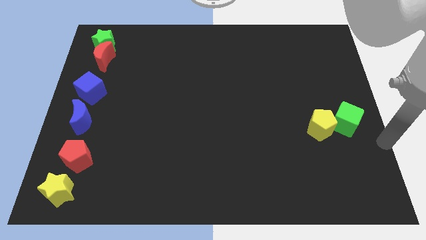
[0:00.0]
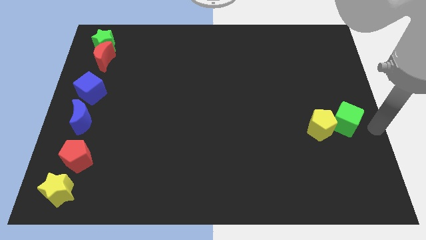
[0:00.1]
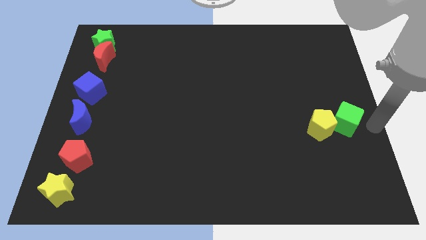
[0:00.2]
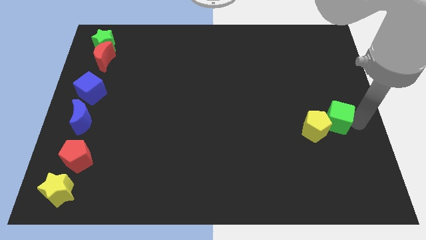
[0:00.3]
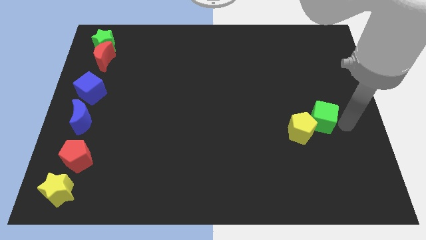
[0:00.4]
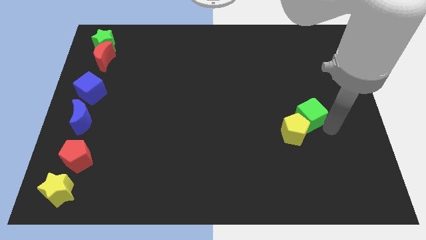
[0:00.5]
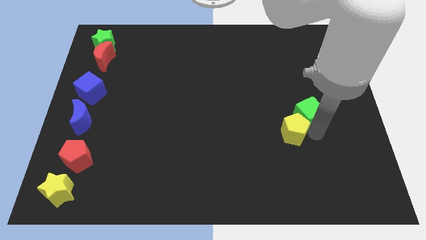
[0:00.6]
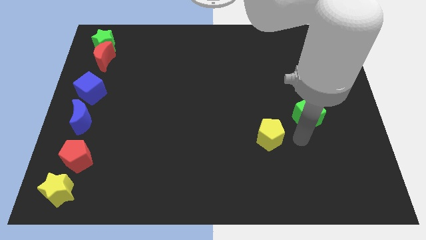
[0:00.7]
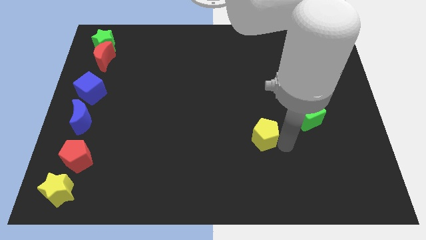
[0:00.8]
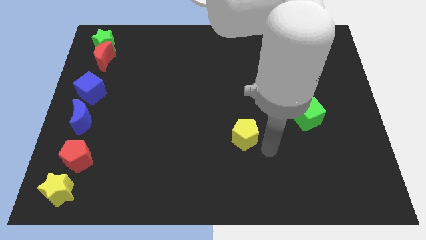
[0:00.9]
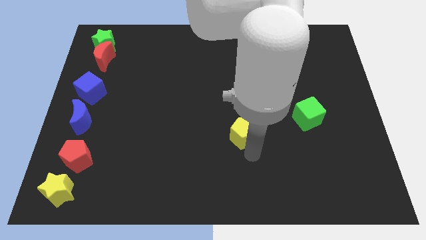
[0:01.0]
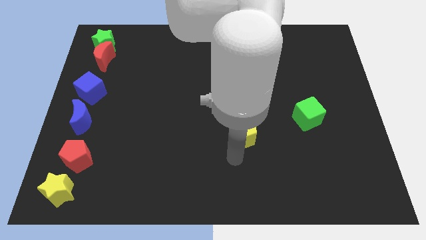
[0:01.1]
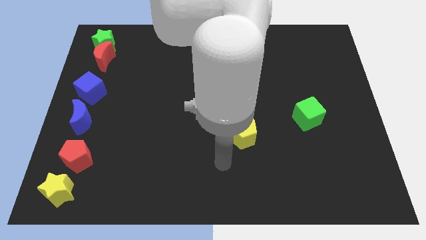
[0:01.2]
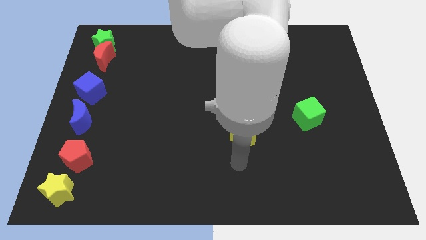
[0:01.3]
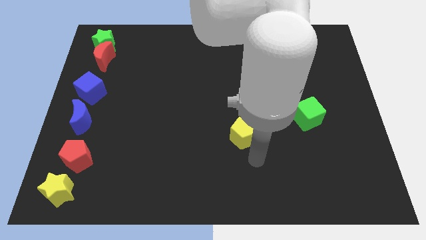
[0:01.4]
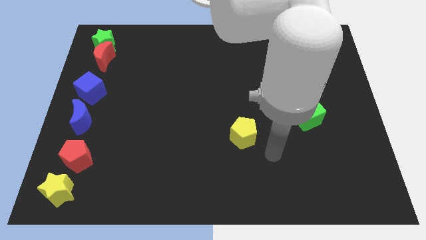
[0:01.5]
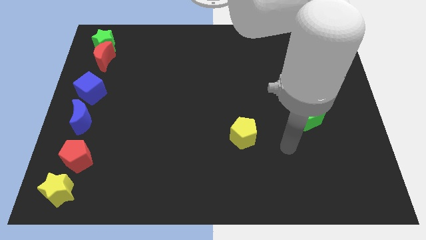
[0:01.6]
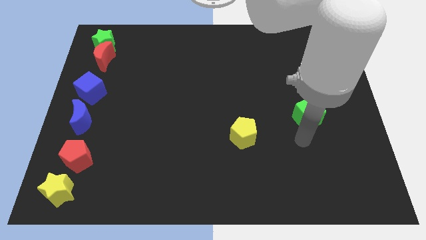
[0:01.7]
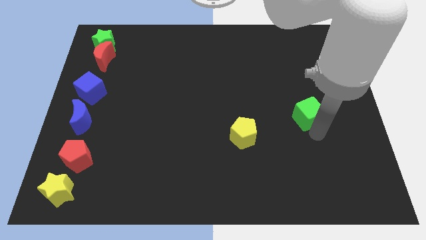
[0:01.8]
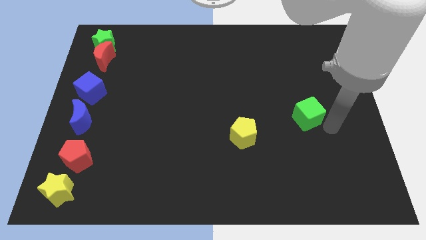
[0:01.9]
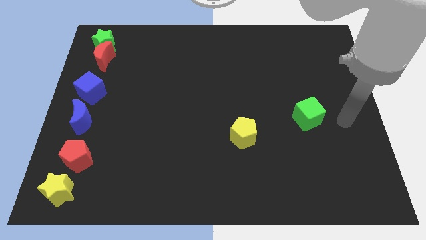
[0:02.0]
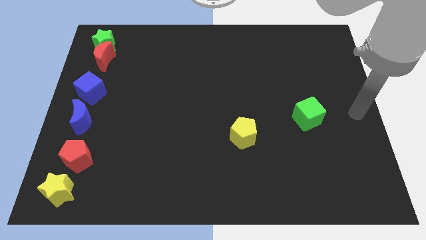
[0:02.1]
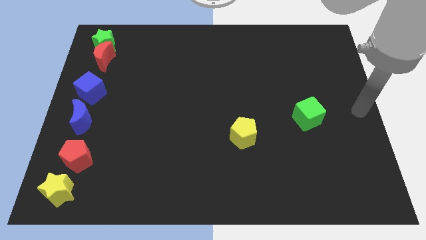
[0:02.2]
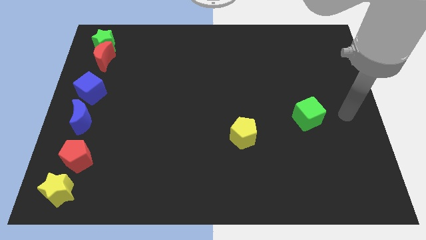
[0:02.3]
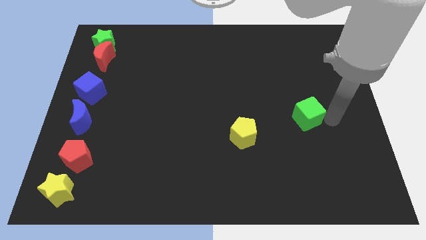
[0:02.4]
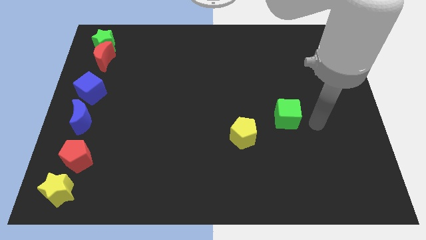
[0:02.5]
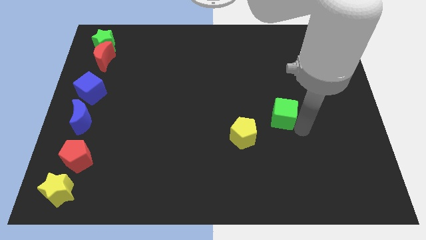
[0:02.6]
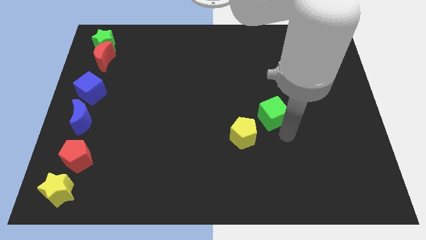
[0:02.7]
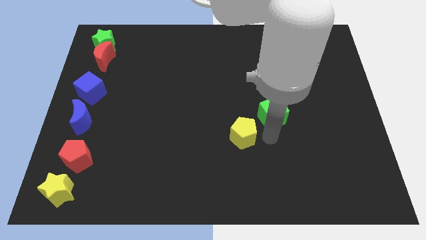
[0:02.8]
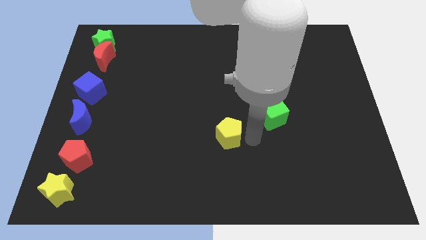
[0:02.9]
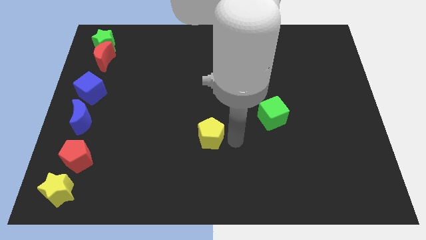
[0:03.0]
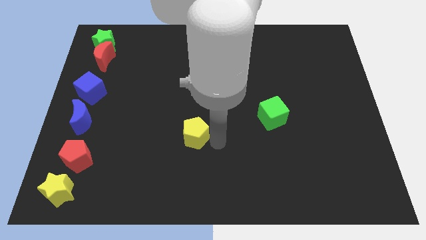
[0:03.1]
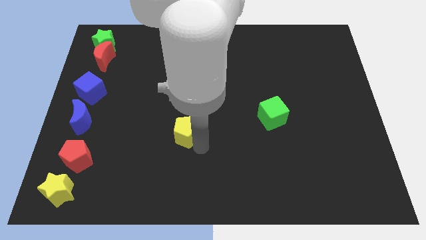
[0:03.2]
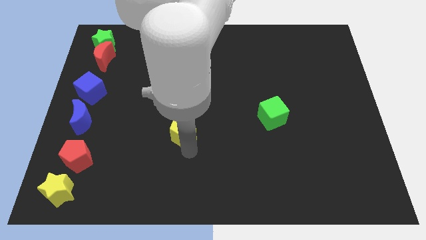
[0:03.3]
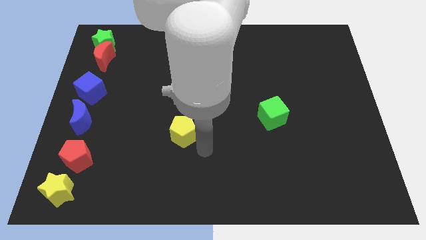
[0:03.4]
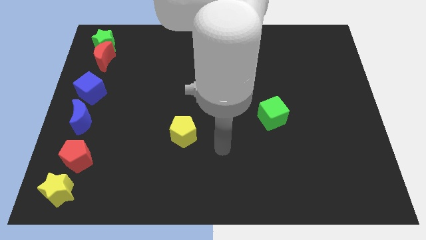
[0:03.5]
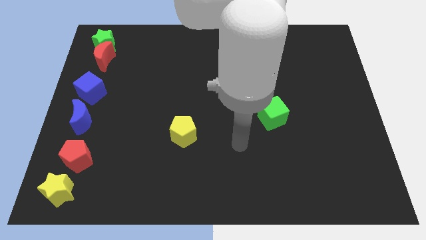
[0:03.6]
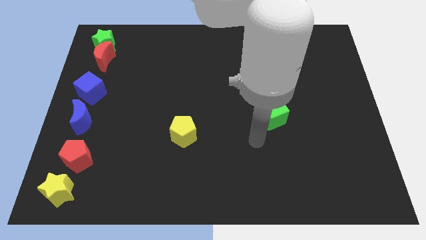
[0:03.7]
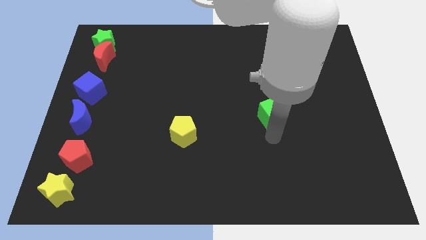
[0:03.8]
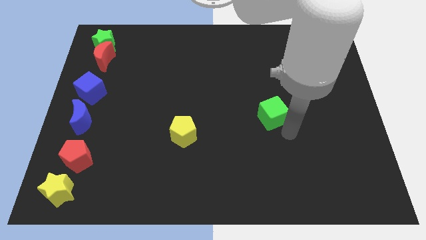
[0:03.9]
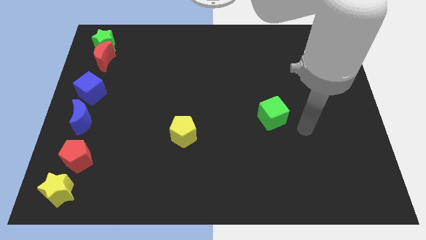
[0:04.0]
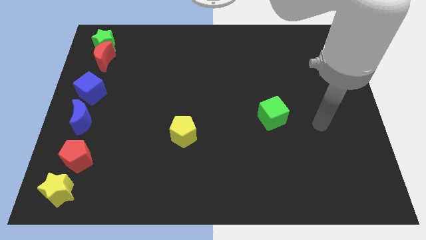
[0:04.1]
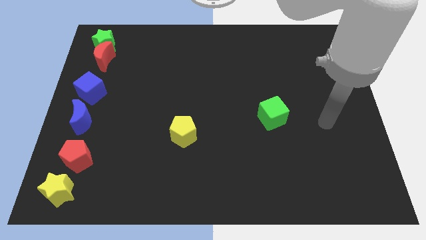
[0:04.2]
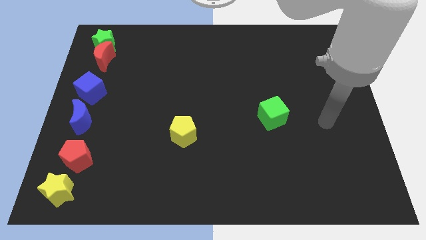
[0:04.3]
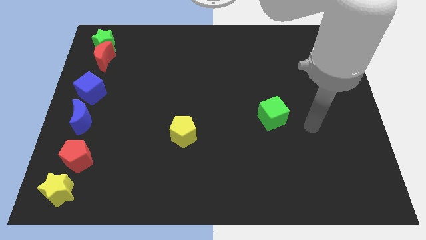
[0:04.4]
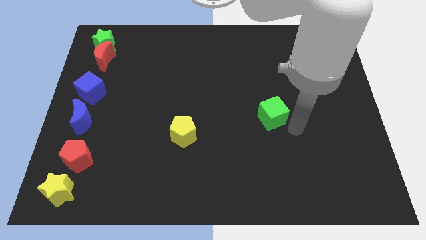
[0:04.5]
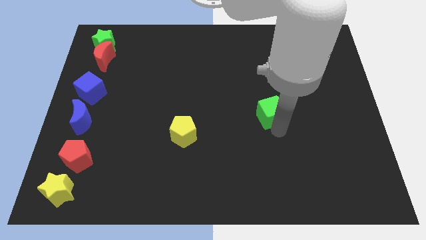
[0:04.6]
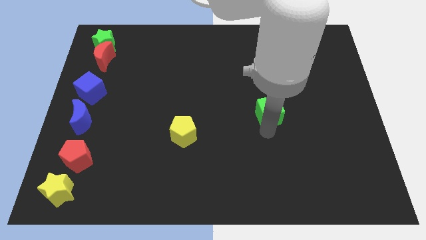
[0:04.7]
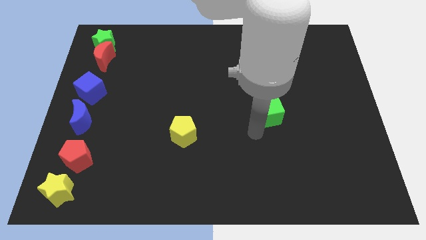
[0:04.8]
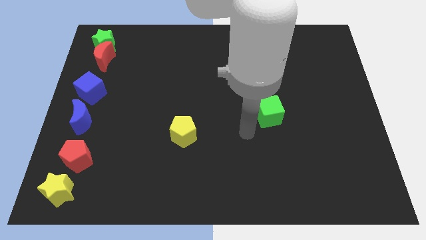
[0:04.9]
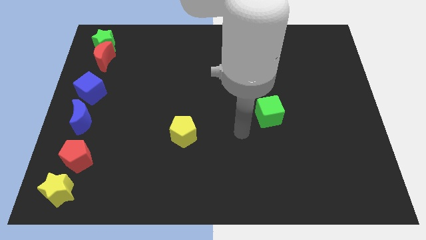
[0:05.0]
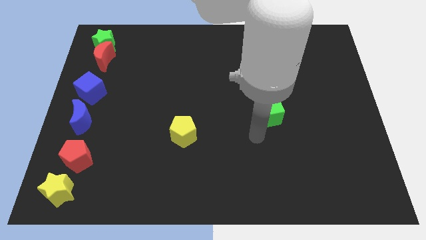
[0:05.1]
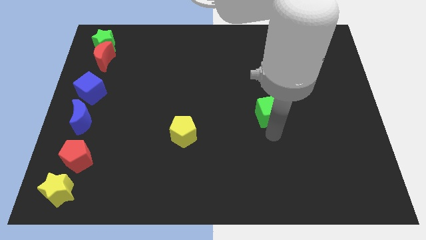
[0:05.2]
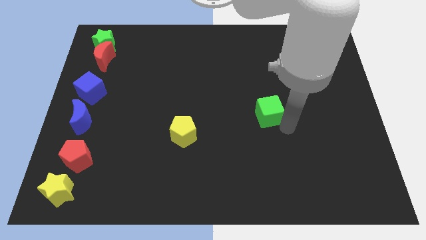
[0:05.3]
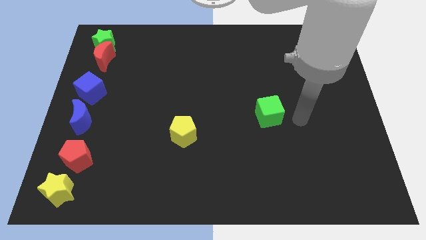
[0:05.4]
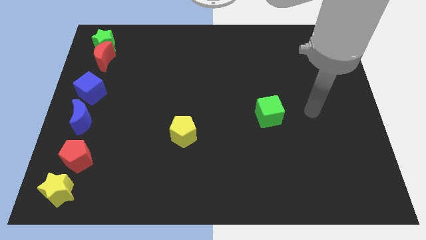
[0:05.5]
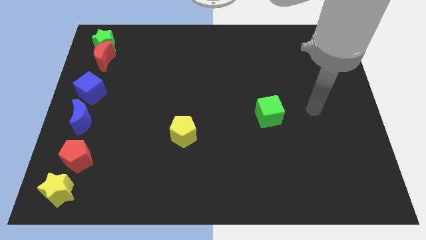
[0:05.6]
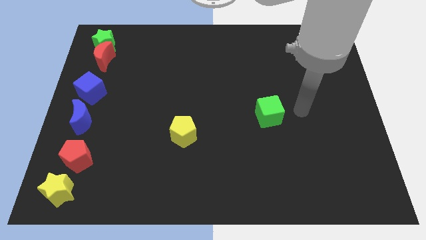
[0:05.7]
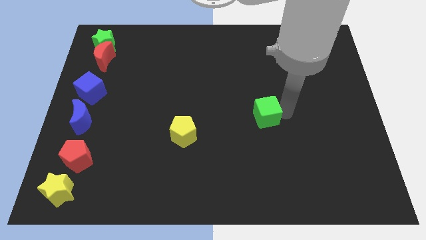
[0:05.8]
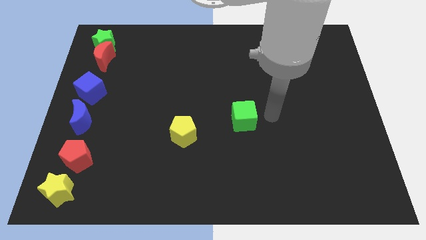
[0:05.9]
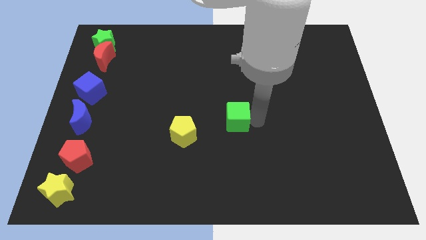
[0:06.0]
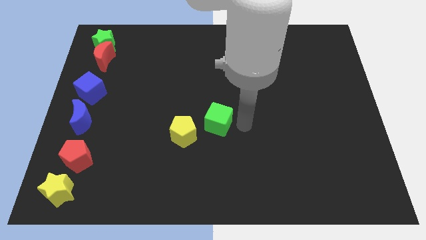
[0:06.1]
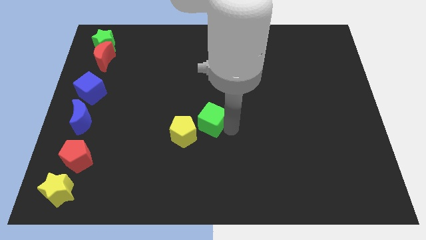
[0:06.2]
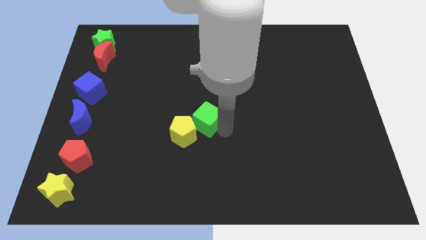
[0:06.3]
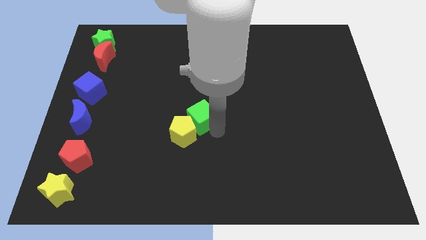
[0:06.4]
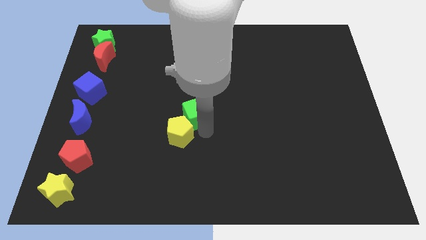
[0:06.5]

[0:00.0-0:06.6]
push the yellow pentagon and green cube to the left

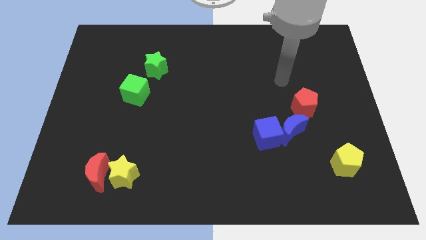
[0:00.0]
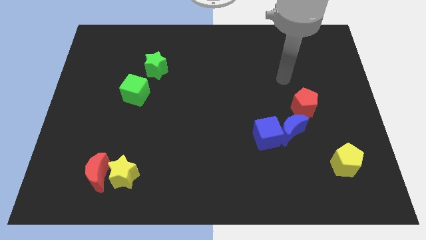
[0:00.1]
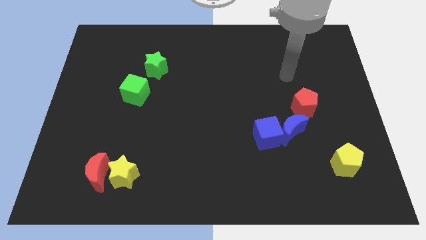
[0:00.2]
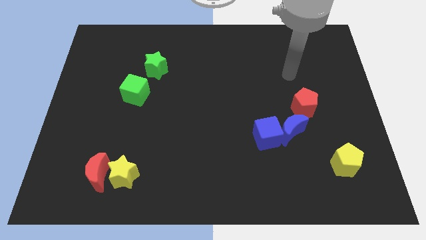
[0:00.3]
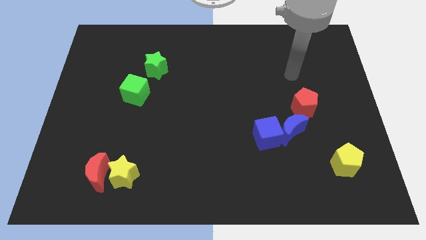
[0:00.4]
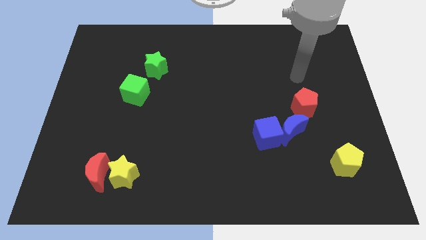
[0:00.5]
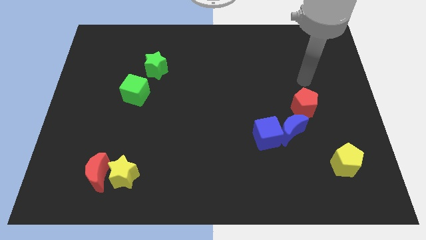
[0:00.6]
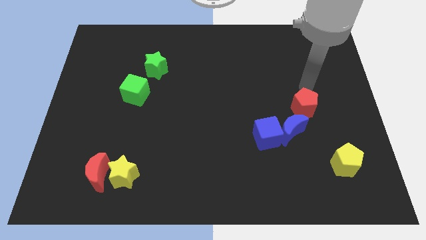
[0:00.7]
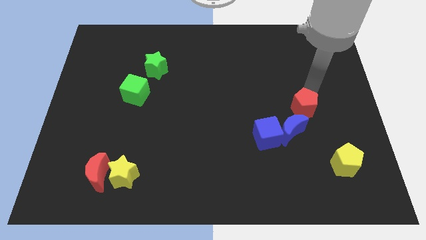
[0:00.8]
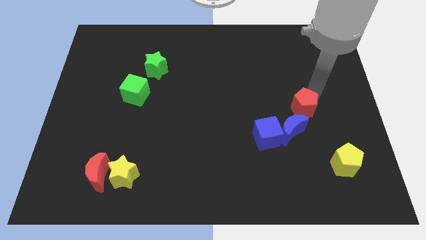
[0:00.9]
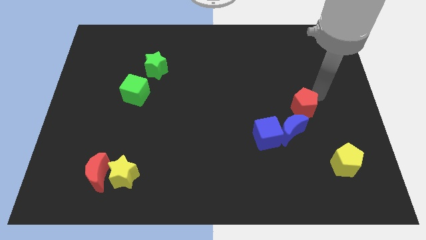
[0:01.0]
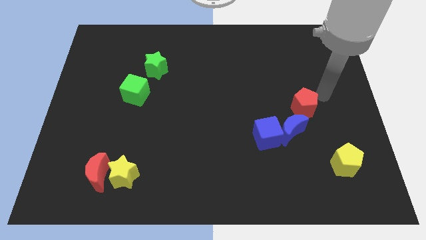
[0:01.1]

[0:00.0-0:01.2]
place your arm to the right of the red pentagon

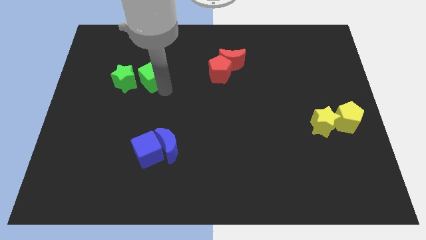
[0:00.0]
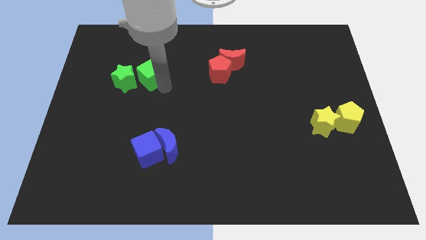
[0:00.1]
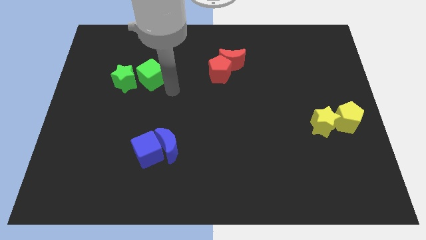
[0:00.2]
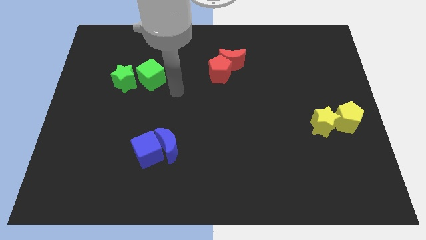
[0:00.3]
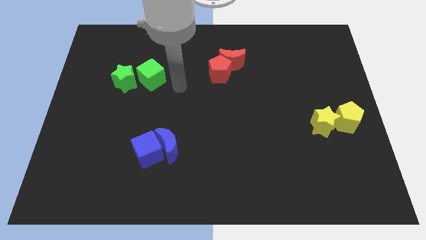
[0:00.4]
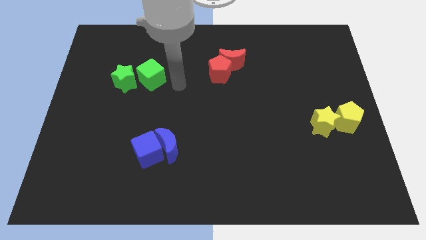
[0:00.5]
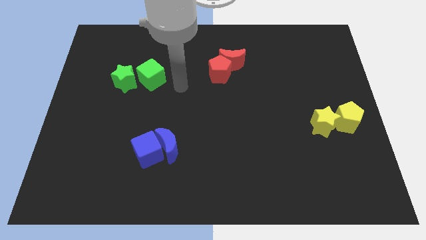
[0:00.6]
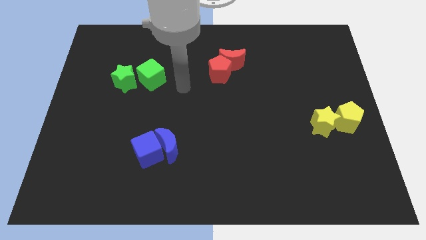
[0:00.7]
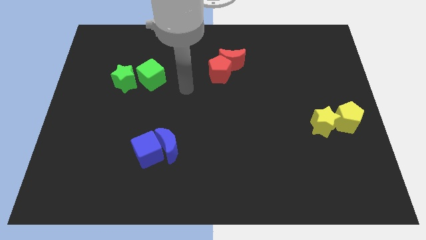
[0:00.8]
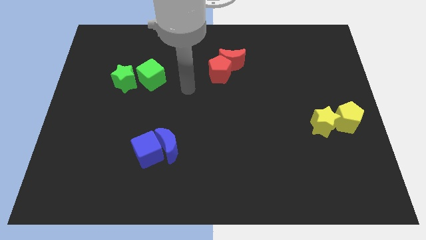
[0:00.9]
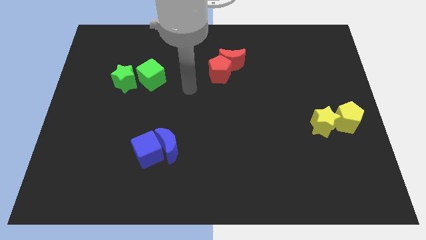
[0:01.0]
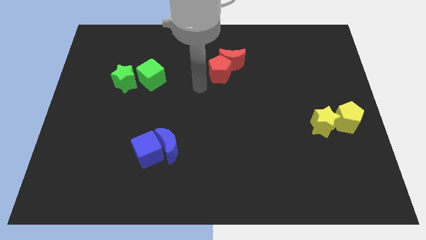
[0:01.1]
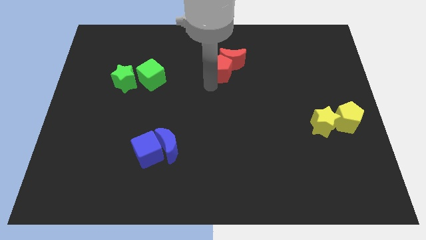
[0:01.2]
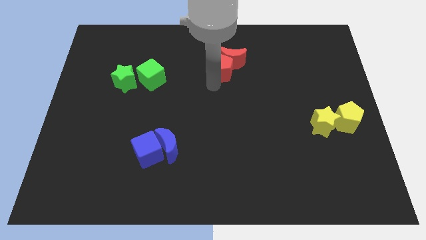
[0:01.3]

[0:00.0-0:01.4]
move your arm into the red pentagon
